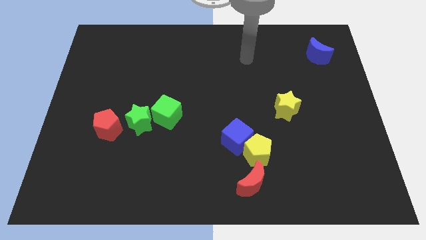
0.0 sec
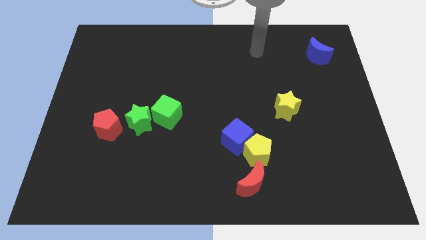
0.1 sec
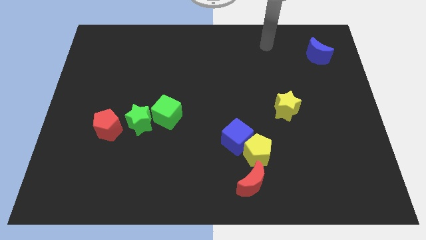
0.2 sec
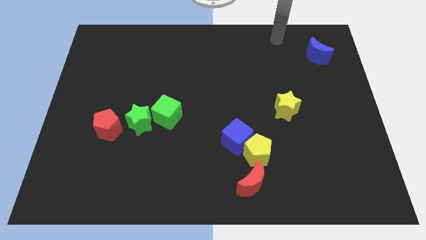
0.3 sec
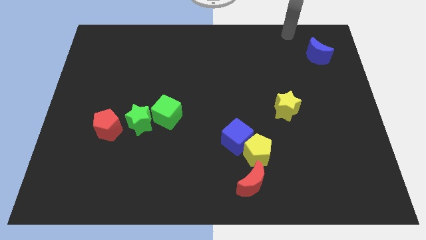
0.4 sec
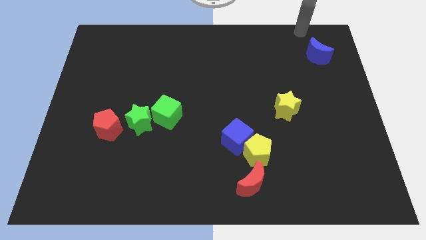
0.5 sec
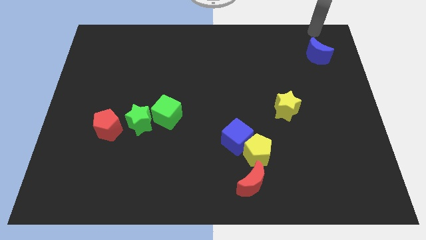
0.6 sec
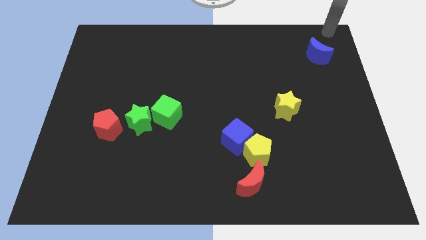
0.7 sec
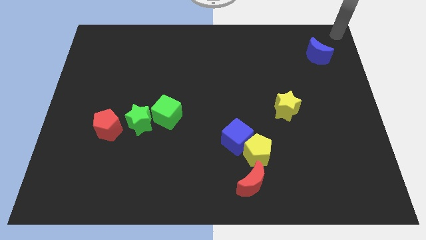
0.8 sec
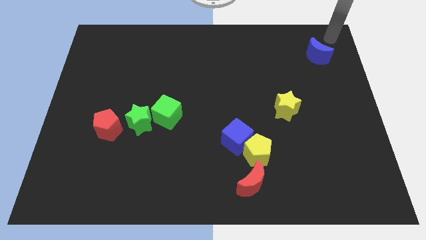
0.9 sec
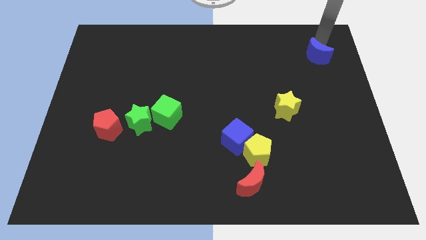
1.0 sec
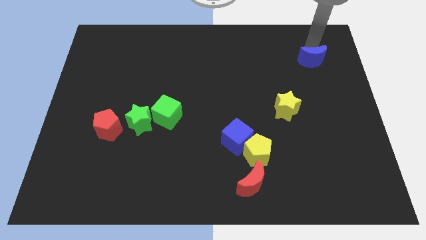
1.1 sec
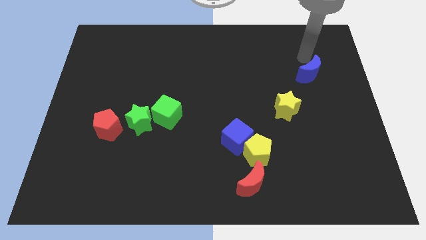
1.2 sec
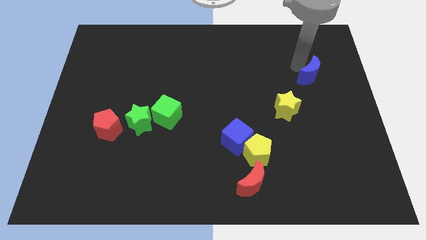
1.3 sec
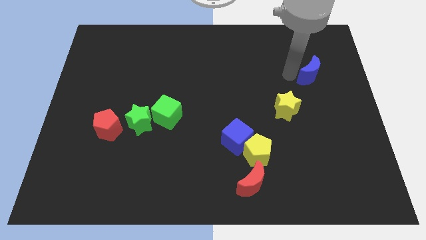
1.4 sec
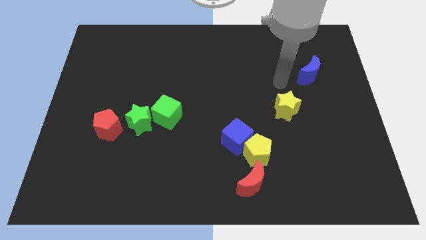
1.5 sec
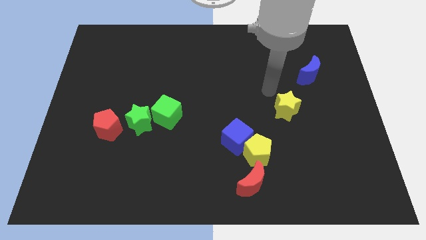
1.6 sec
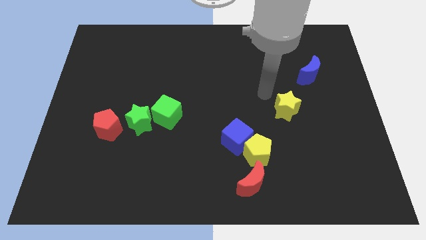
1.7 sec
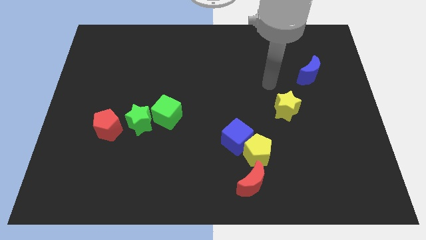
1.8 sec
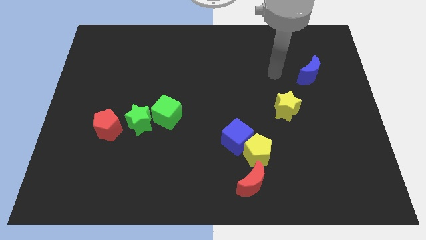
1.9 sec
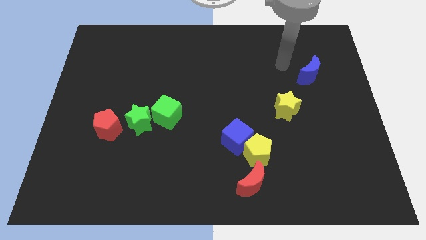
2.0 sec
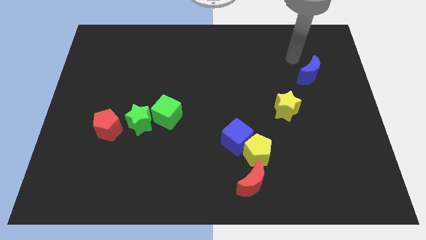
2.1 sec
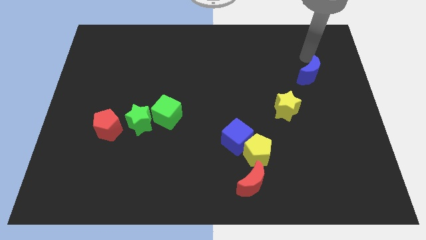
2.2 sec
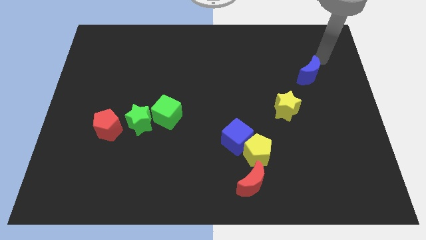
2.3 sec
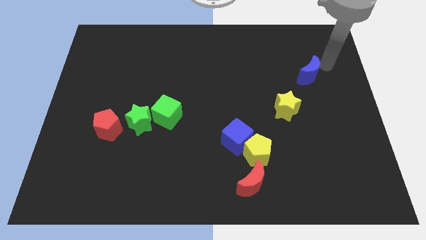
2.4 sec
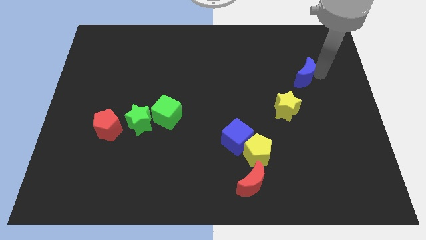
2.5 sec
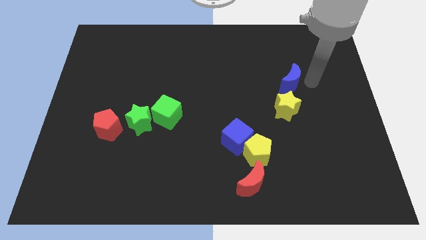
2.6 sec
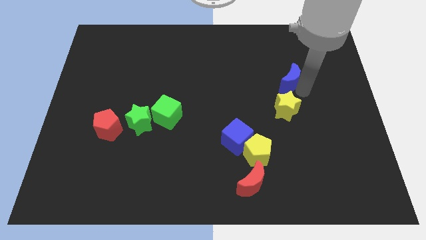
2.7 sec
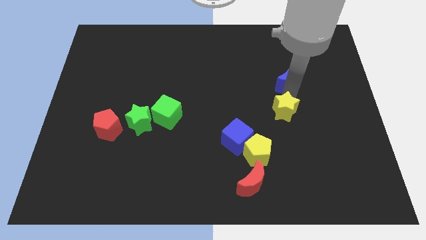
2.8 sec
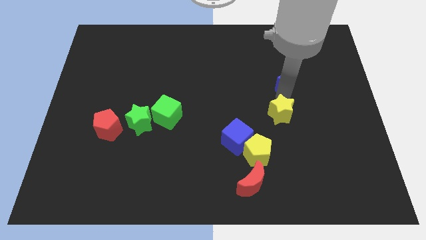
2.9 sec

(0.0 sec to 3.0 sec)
push the blue crescent to the top of the yellow star

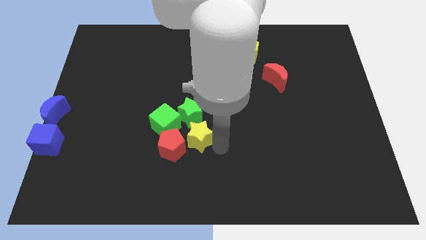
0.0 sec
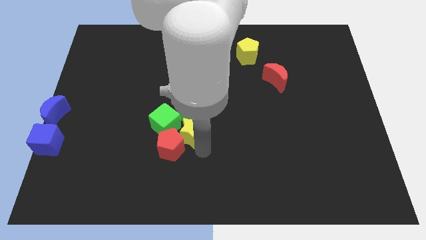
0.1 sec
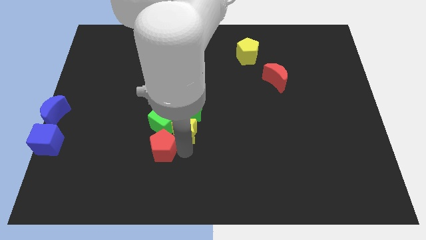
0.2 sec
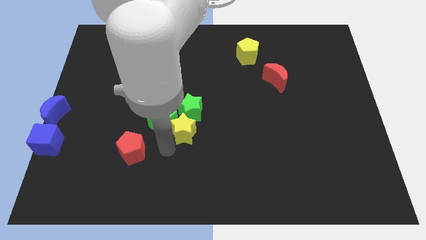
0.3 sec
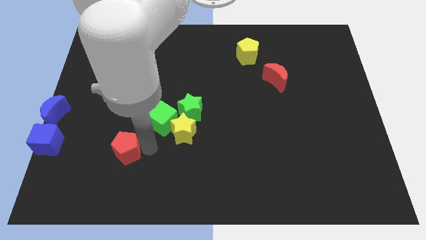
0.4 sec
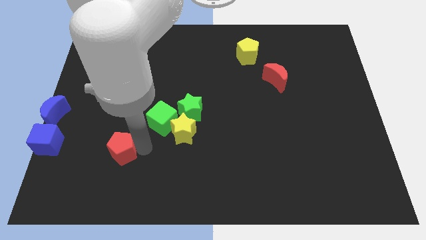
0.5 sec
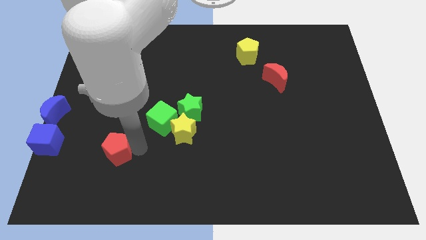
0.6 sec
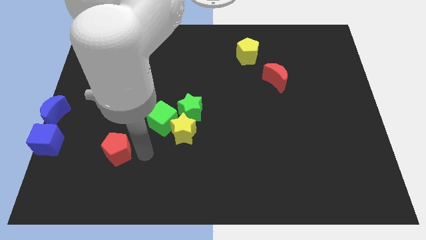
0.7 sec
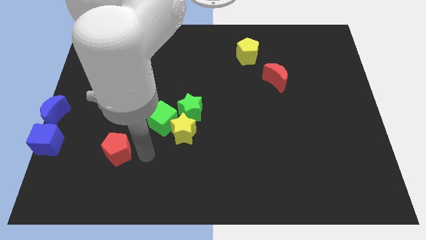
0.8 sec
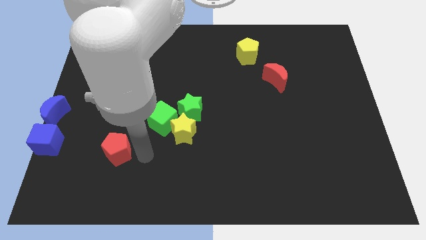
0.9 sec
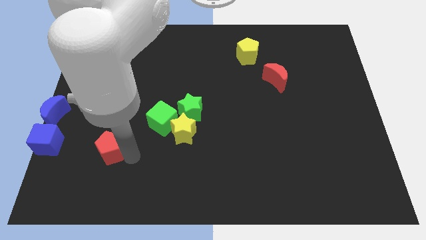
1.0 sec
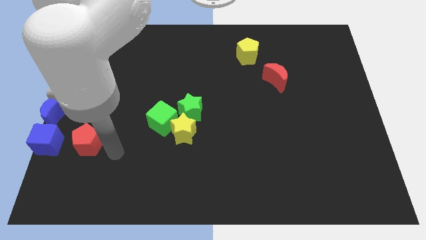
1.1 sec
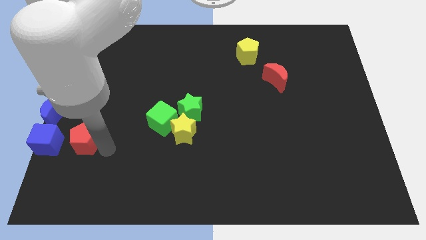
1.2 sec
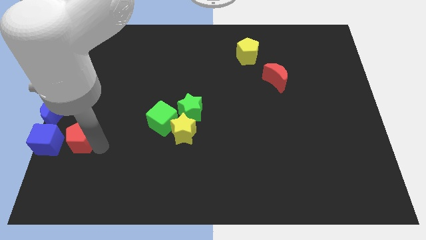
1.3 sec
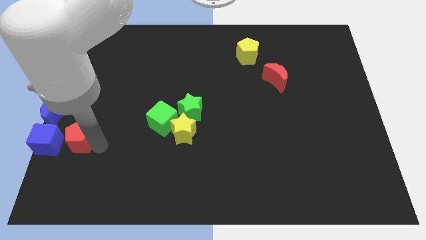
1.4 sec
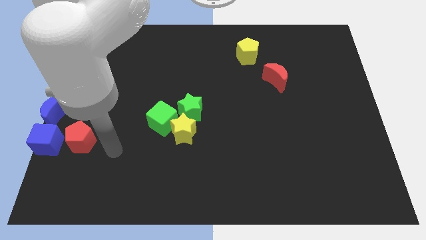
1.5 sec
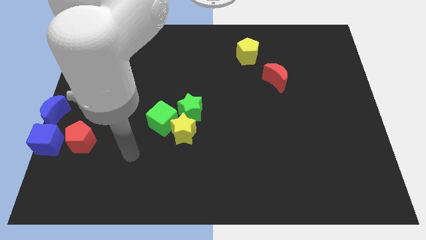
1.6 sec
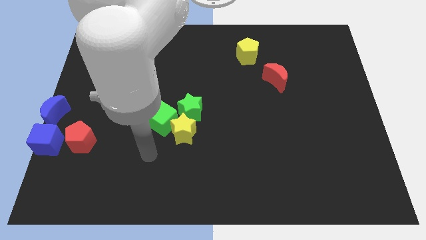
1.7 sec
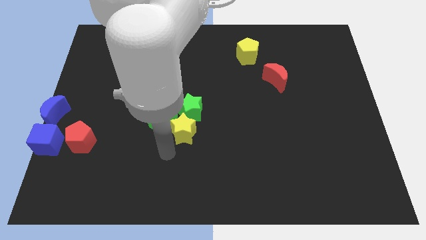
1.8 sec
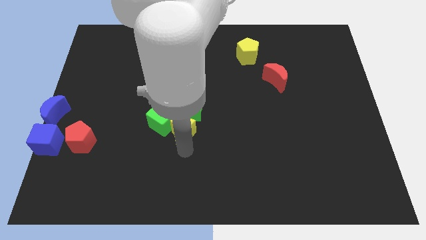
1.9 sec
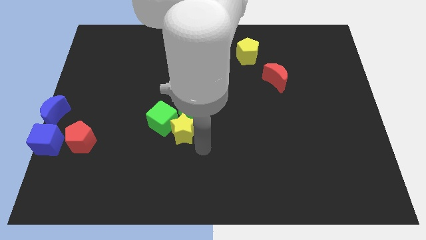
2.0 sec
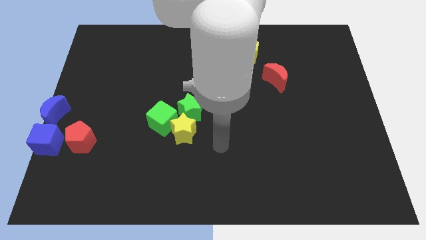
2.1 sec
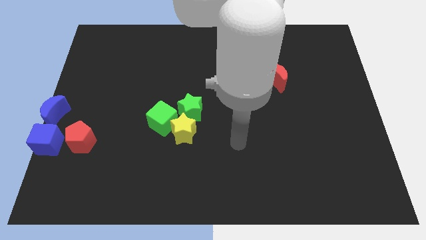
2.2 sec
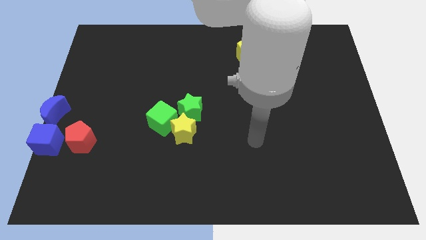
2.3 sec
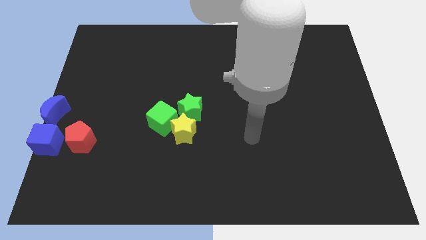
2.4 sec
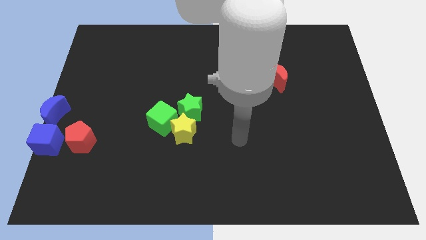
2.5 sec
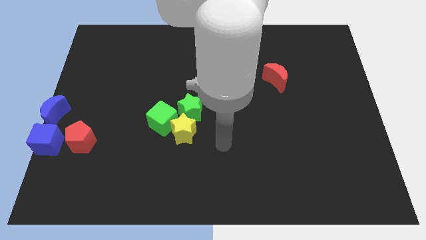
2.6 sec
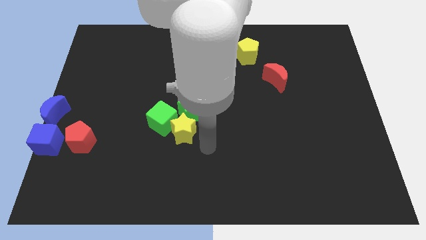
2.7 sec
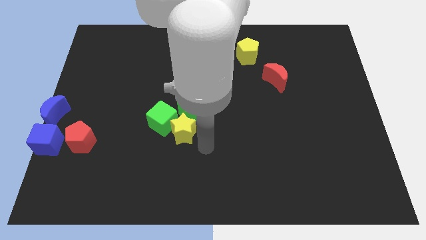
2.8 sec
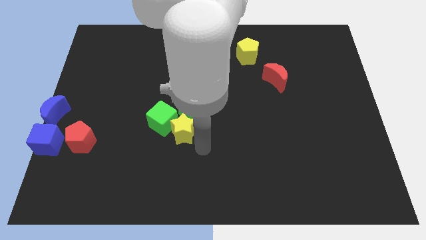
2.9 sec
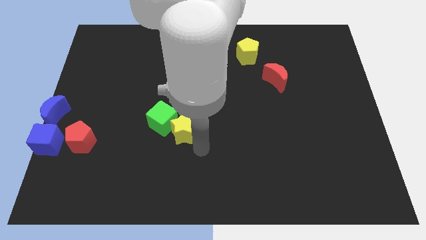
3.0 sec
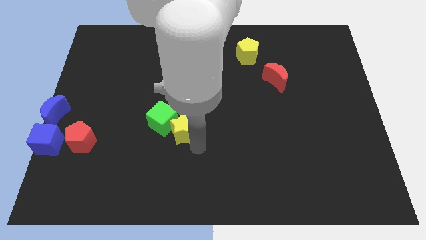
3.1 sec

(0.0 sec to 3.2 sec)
separate the yellow star and red pentagon

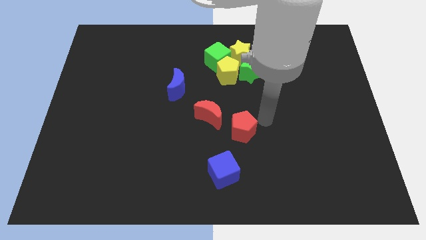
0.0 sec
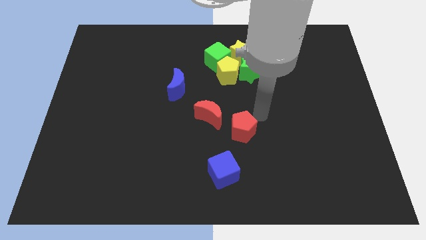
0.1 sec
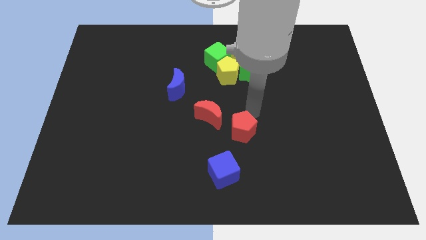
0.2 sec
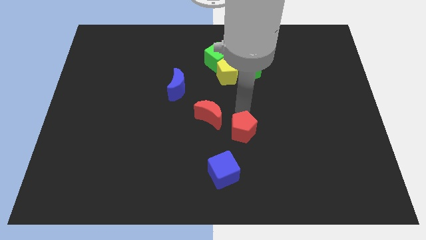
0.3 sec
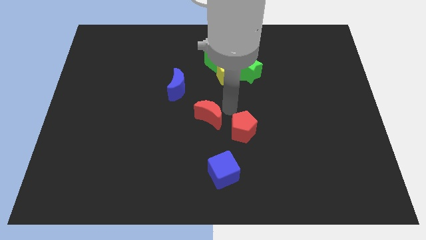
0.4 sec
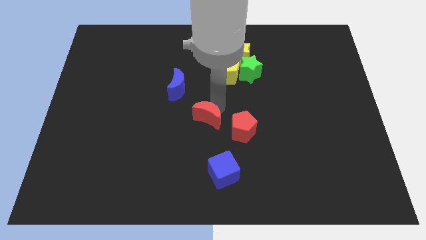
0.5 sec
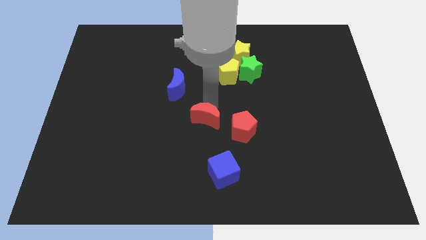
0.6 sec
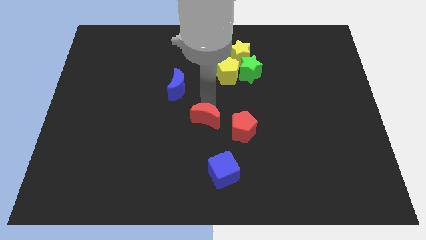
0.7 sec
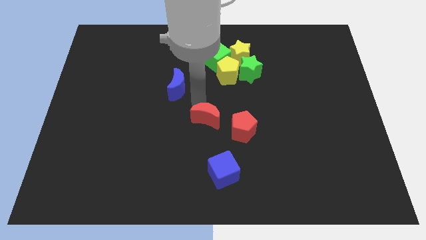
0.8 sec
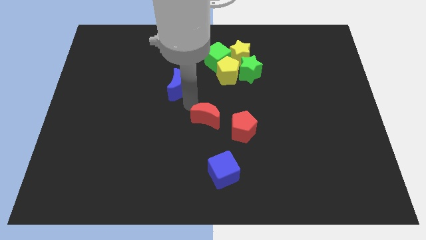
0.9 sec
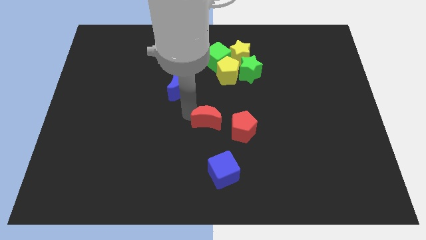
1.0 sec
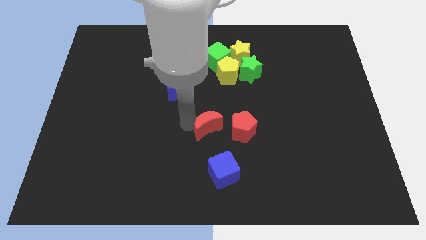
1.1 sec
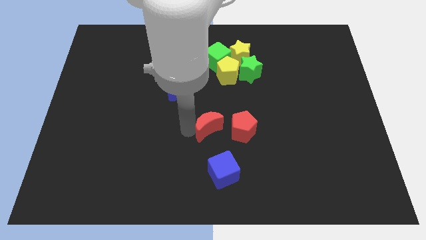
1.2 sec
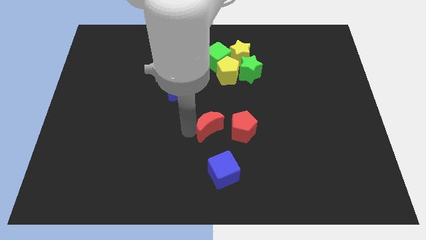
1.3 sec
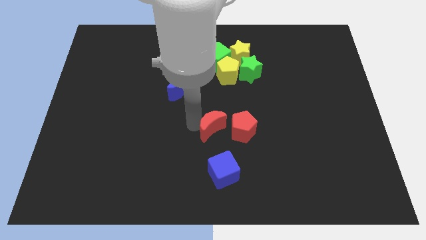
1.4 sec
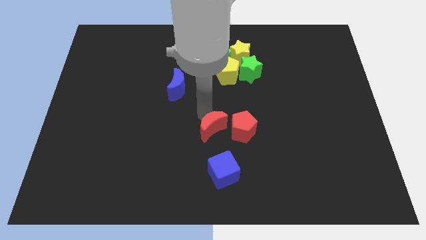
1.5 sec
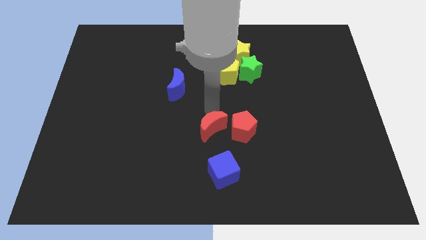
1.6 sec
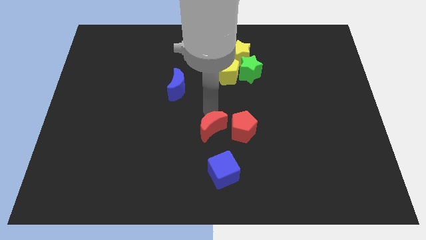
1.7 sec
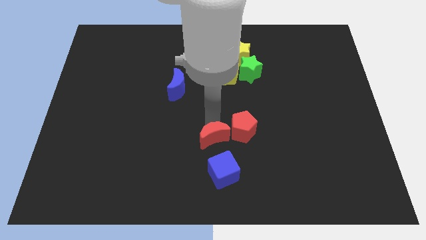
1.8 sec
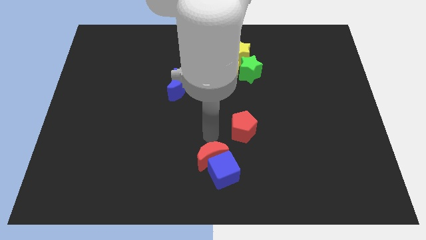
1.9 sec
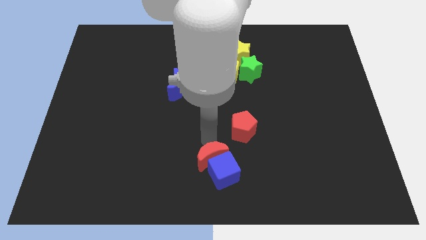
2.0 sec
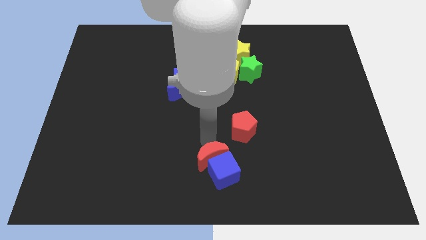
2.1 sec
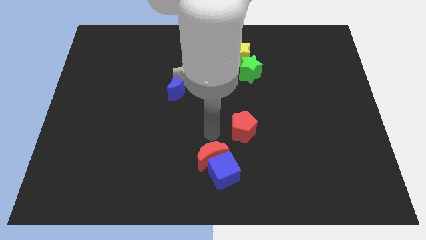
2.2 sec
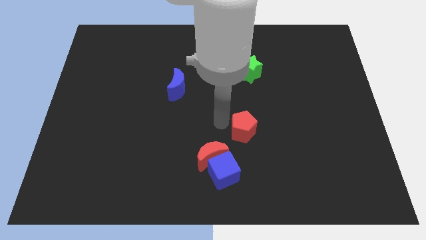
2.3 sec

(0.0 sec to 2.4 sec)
move the red moon into the blue cube

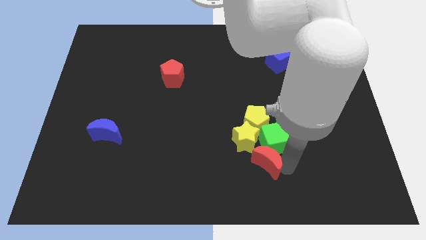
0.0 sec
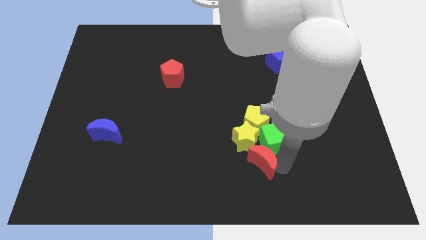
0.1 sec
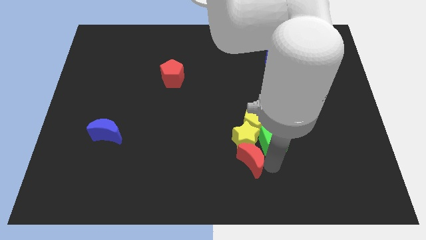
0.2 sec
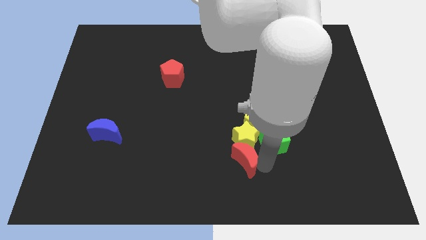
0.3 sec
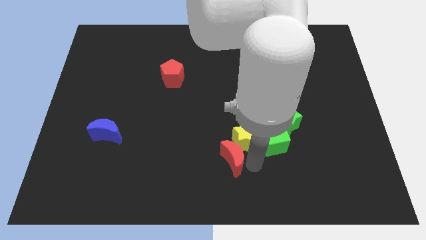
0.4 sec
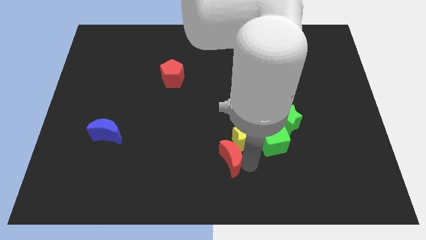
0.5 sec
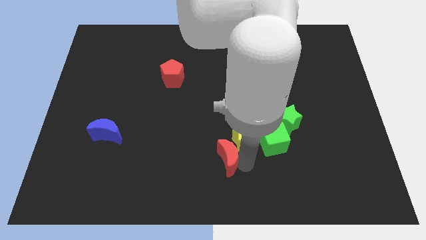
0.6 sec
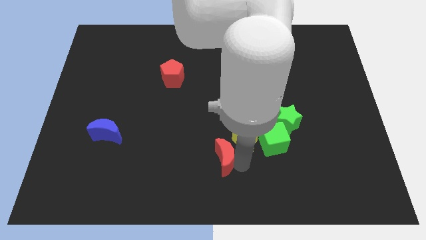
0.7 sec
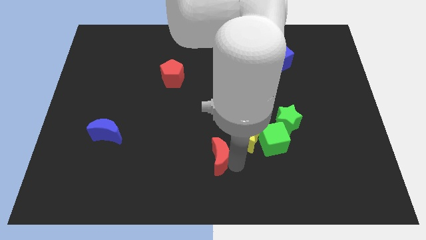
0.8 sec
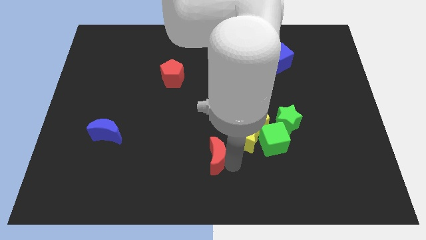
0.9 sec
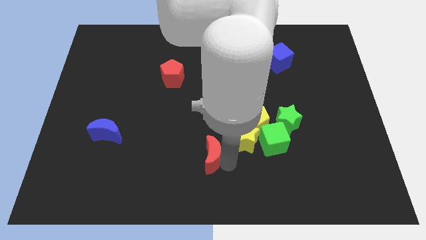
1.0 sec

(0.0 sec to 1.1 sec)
push the red crescent to the left of the baord
